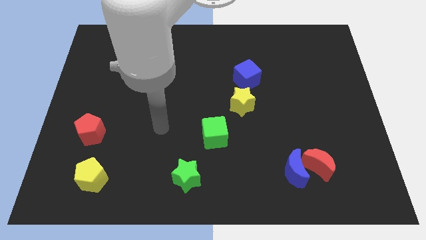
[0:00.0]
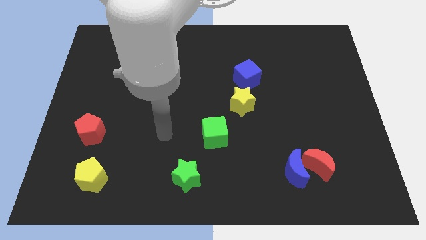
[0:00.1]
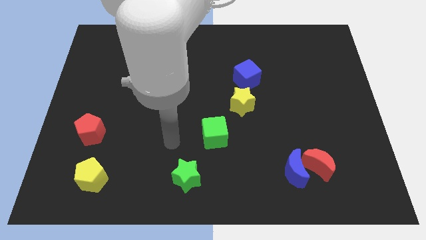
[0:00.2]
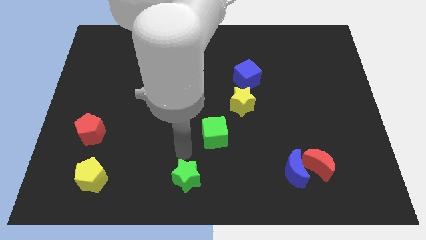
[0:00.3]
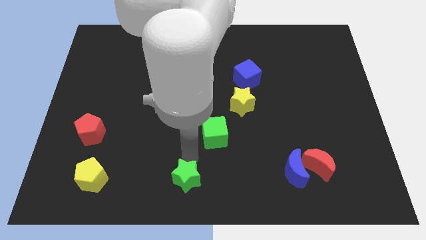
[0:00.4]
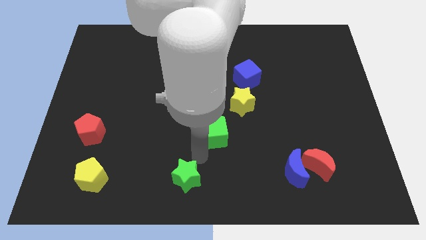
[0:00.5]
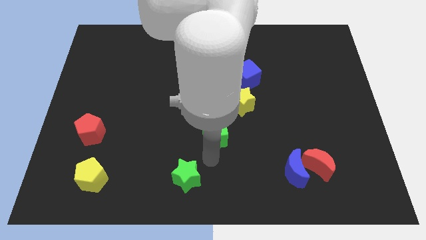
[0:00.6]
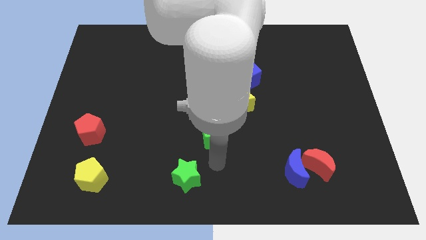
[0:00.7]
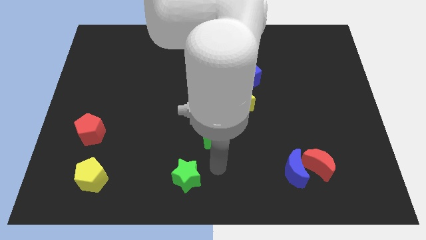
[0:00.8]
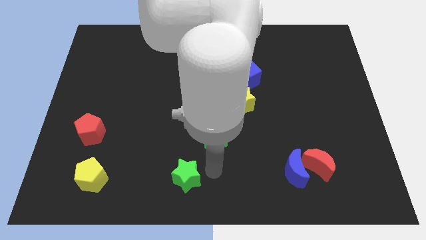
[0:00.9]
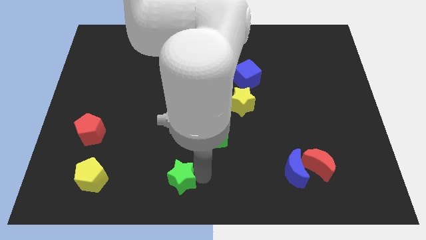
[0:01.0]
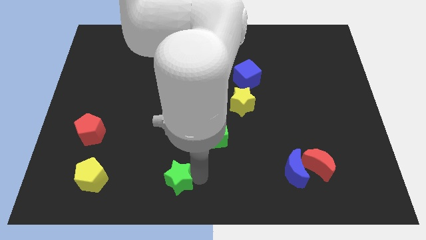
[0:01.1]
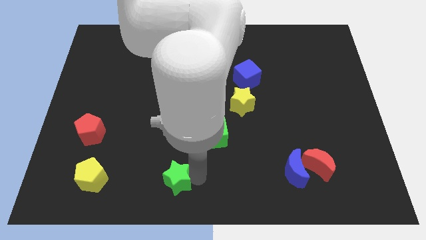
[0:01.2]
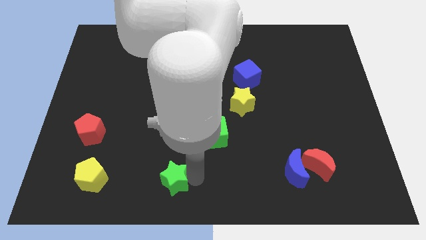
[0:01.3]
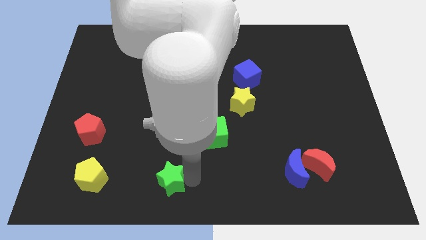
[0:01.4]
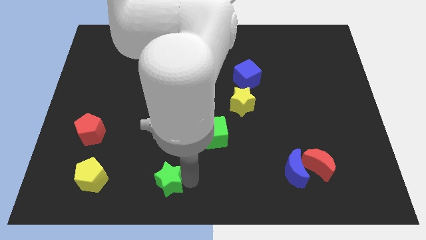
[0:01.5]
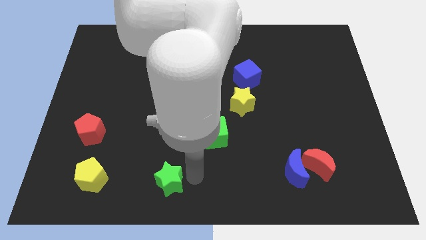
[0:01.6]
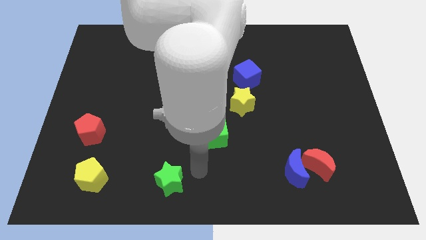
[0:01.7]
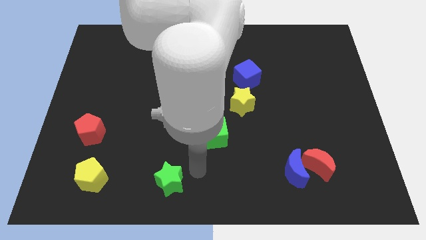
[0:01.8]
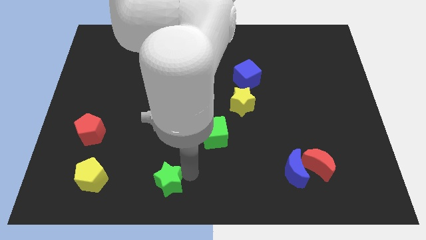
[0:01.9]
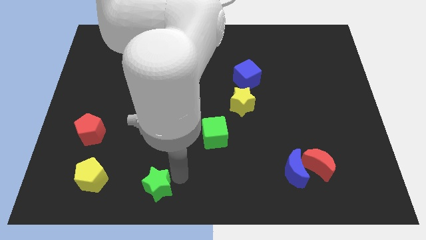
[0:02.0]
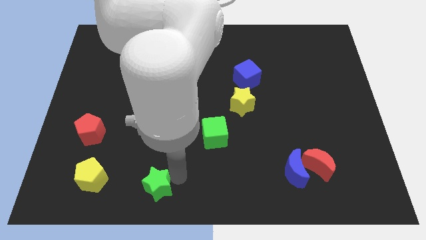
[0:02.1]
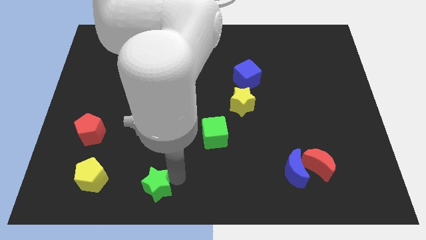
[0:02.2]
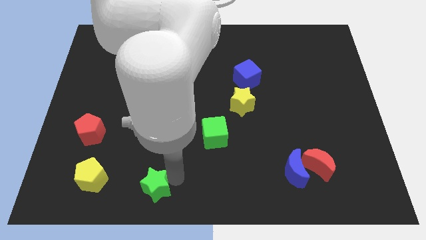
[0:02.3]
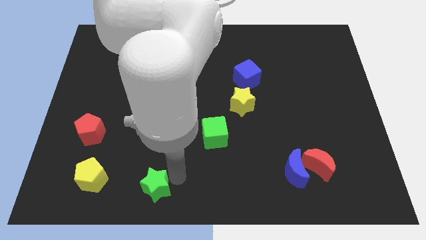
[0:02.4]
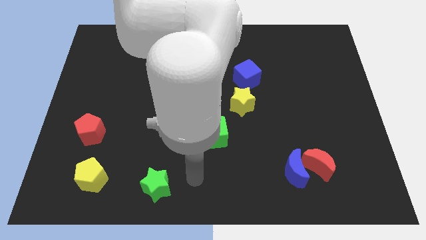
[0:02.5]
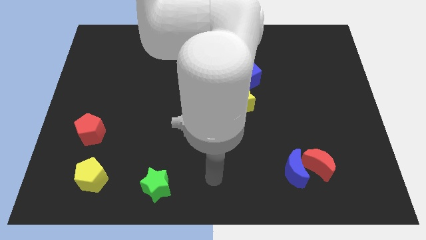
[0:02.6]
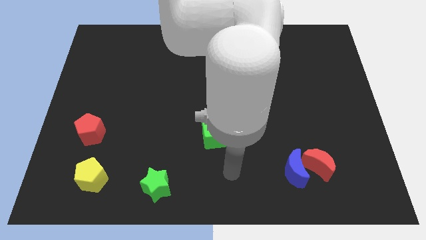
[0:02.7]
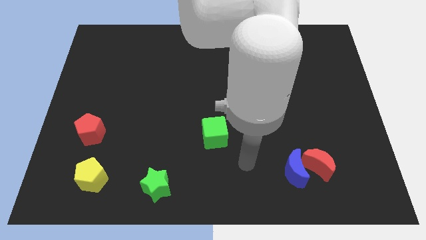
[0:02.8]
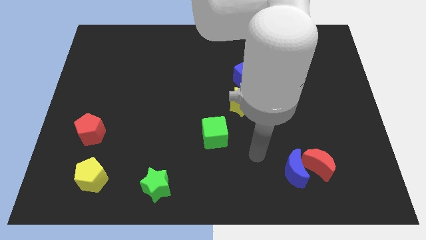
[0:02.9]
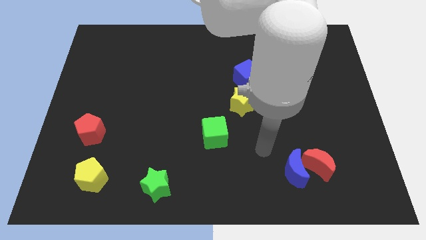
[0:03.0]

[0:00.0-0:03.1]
put the green star to the right side of the yellow pentagon

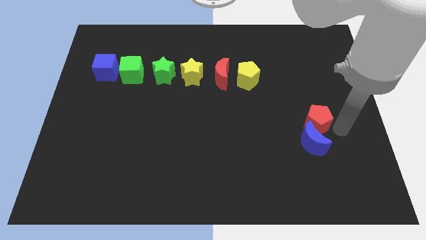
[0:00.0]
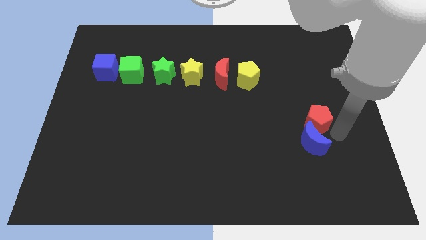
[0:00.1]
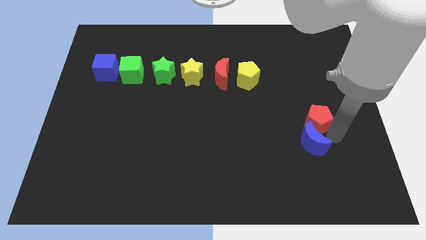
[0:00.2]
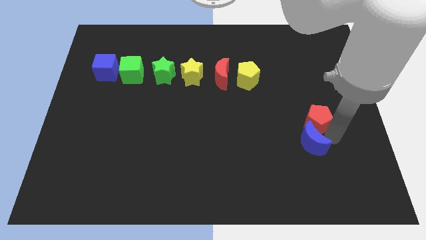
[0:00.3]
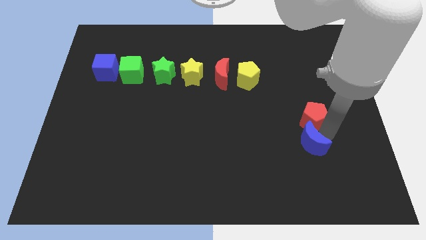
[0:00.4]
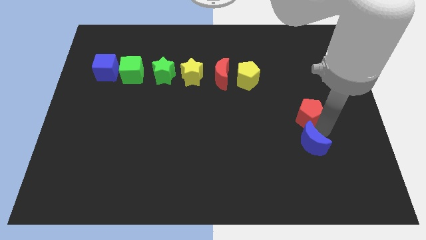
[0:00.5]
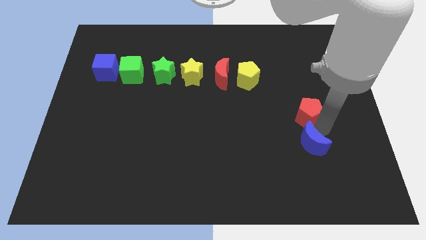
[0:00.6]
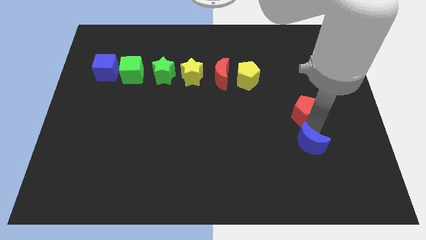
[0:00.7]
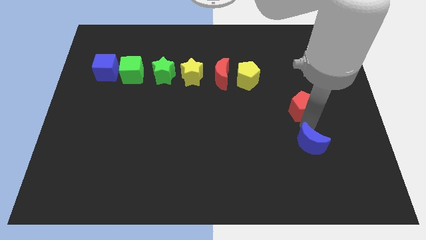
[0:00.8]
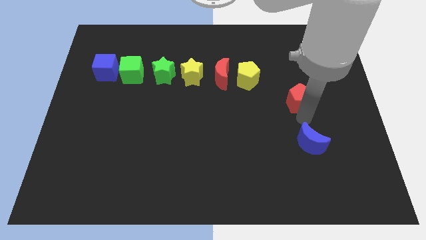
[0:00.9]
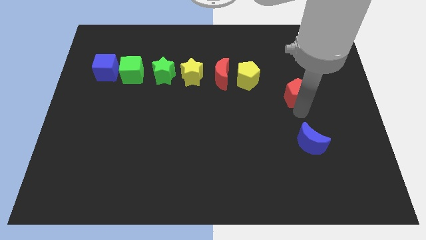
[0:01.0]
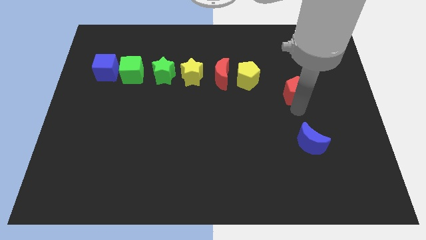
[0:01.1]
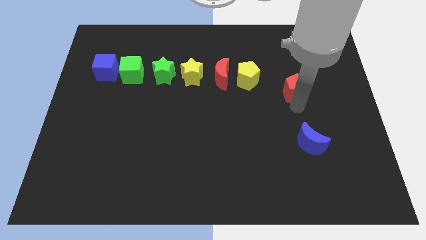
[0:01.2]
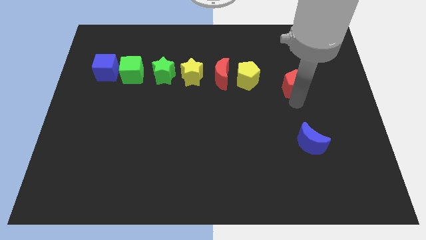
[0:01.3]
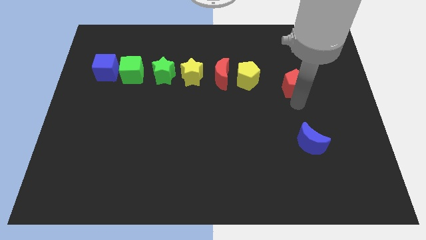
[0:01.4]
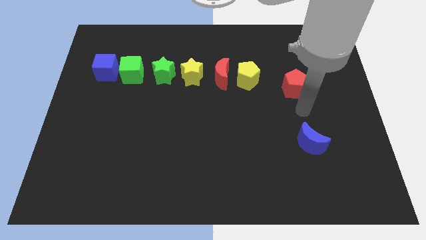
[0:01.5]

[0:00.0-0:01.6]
separate the red pentagon from the blue moon

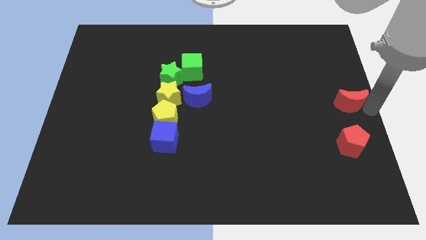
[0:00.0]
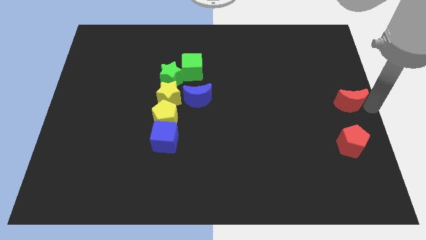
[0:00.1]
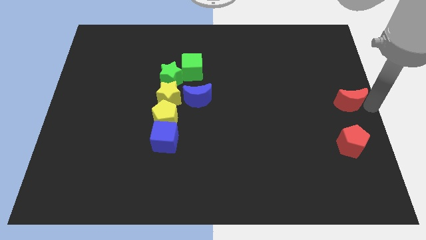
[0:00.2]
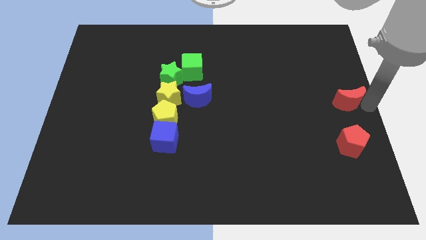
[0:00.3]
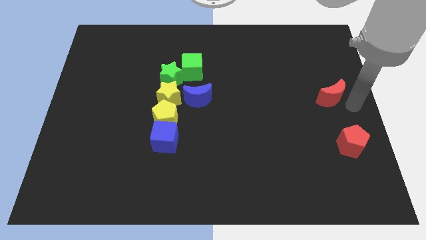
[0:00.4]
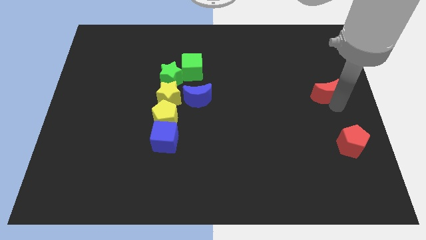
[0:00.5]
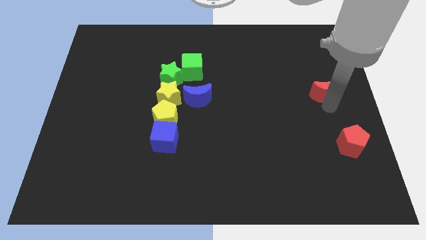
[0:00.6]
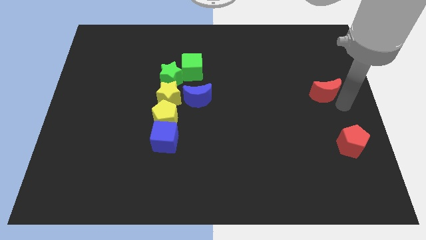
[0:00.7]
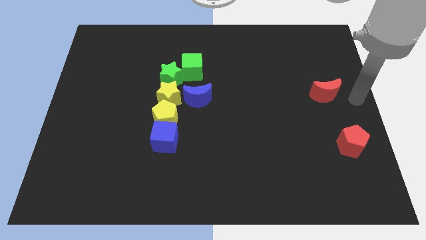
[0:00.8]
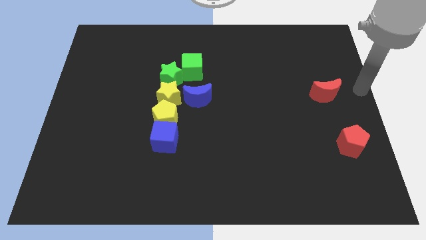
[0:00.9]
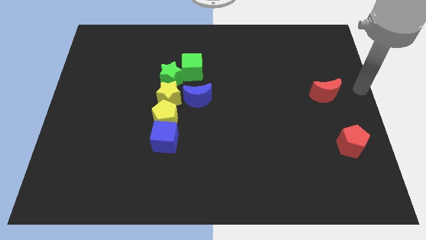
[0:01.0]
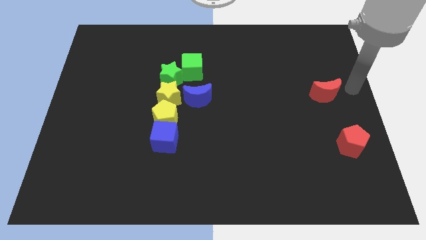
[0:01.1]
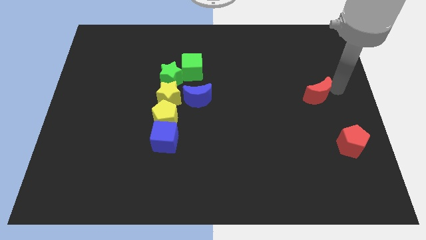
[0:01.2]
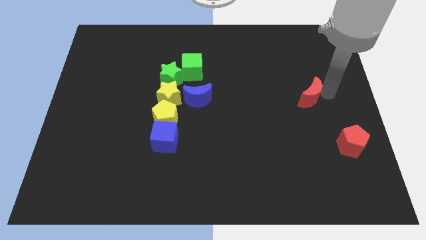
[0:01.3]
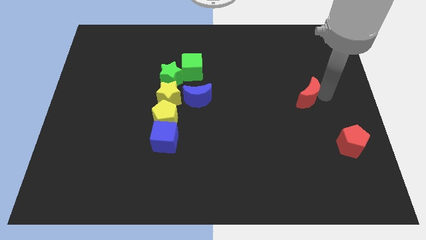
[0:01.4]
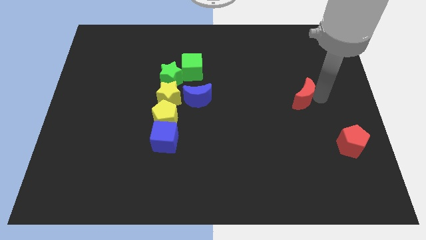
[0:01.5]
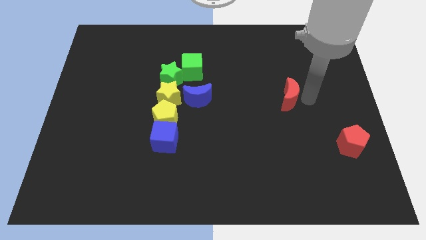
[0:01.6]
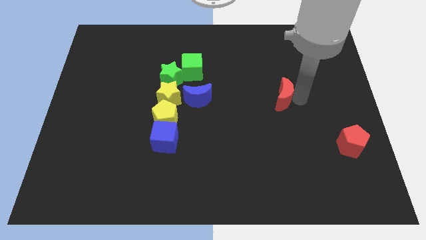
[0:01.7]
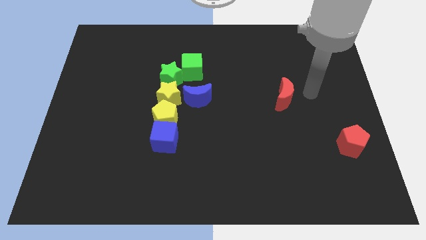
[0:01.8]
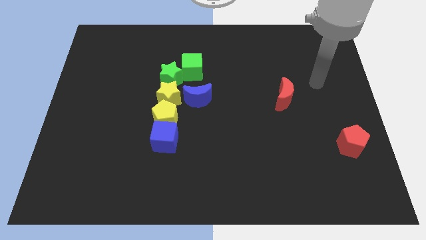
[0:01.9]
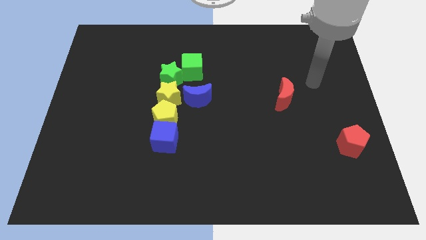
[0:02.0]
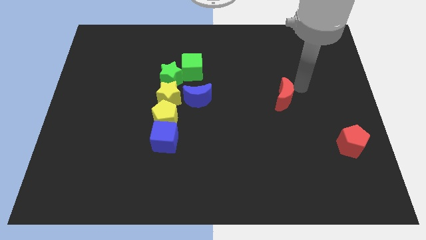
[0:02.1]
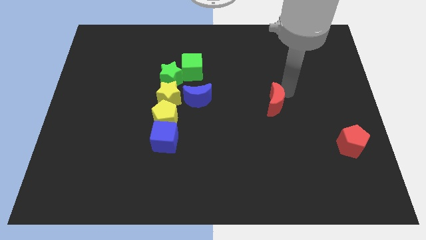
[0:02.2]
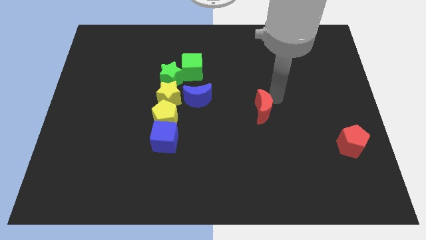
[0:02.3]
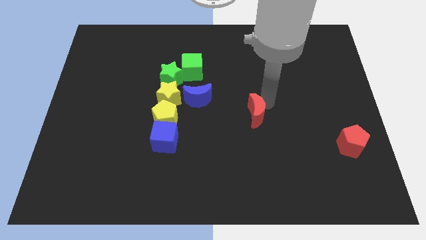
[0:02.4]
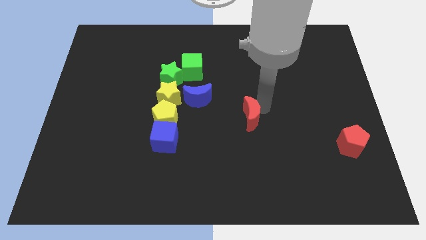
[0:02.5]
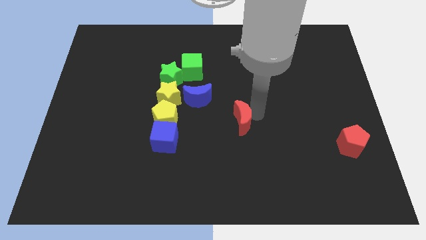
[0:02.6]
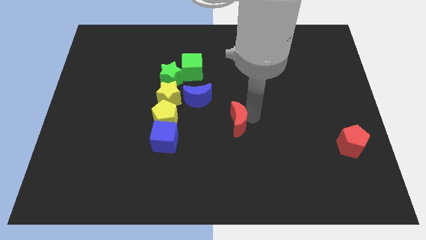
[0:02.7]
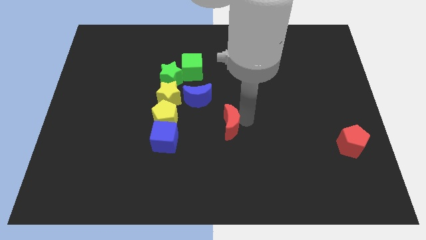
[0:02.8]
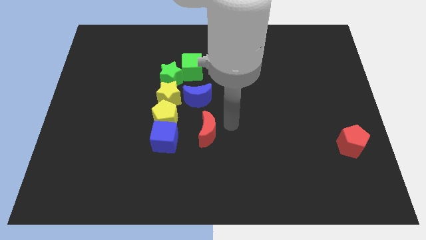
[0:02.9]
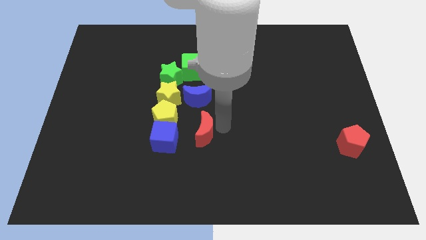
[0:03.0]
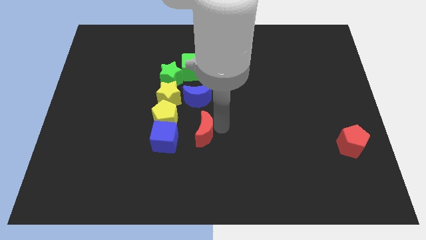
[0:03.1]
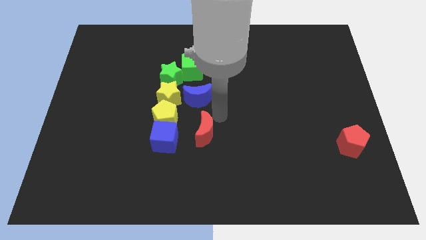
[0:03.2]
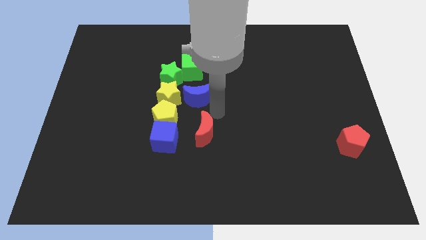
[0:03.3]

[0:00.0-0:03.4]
place the red moon down to the blue moon

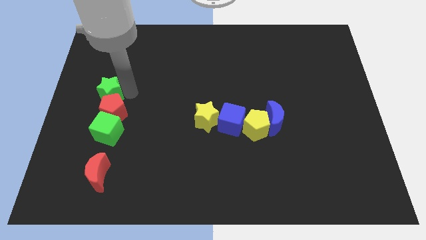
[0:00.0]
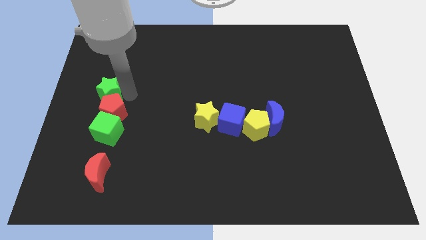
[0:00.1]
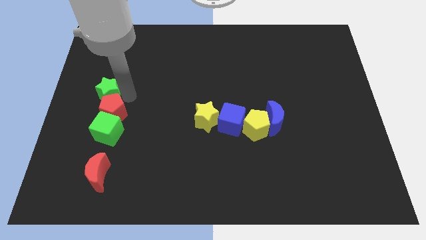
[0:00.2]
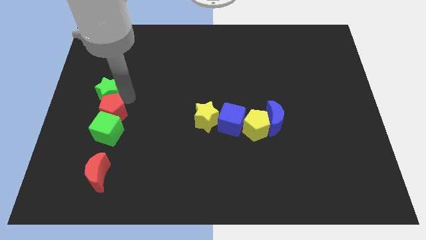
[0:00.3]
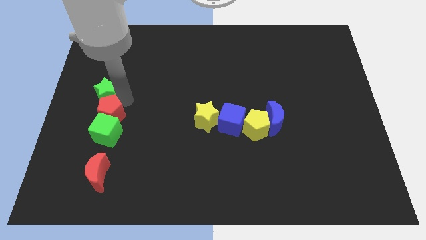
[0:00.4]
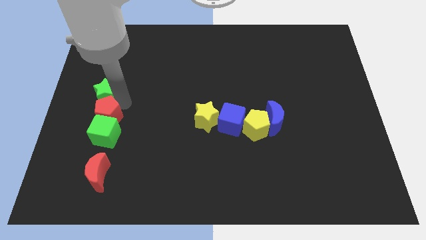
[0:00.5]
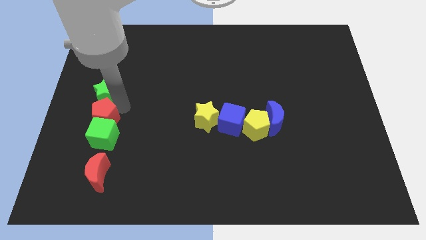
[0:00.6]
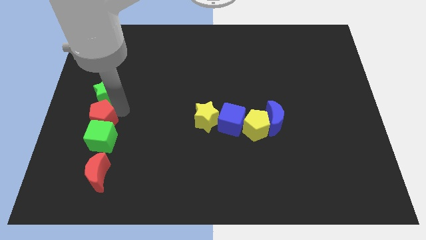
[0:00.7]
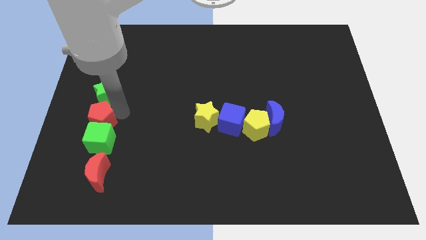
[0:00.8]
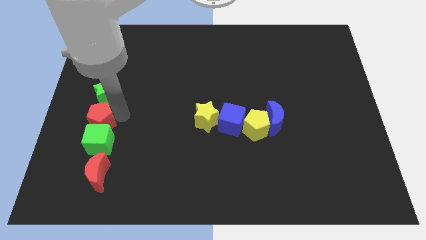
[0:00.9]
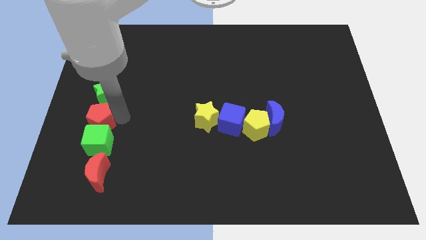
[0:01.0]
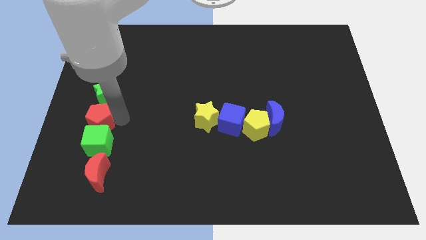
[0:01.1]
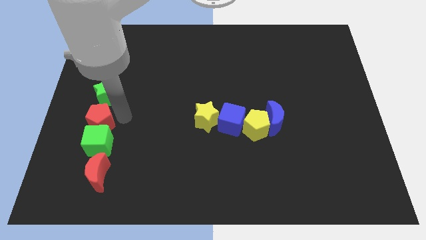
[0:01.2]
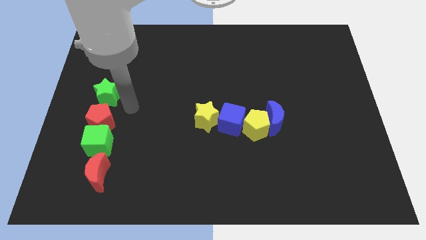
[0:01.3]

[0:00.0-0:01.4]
slightly push the red pentagon into the green cube
